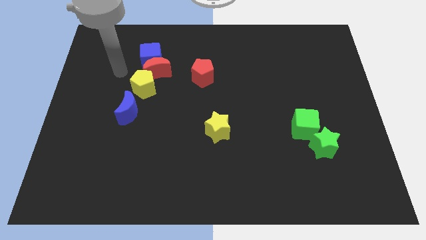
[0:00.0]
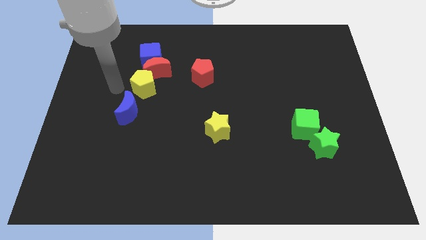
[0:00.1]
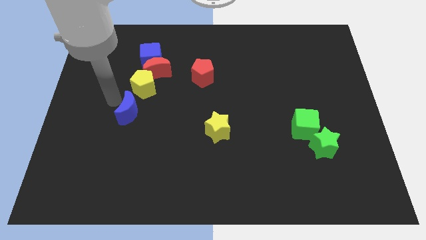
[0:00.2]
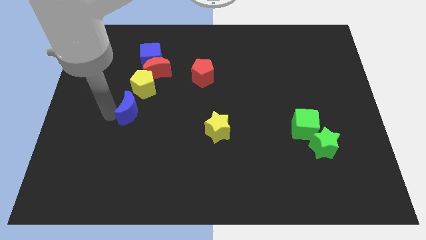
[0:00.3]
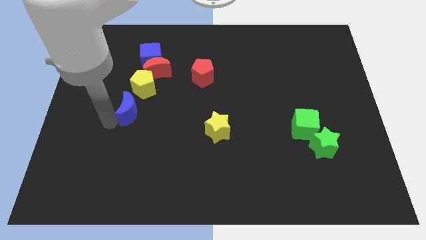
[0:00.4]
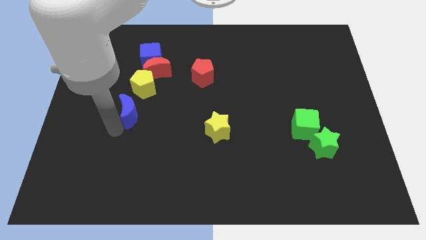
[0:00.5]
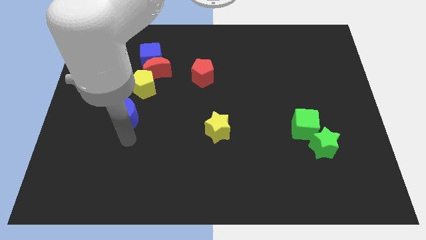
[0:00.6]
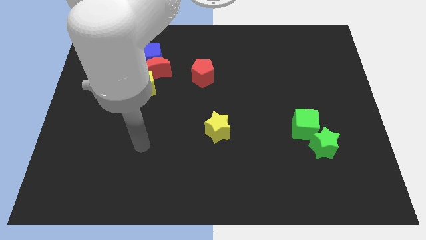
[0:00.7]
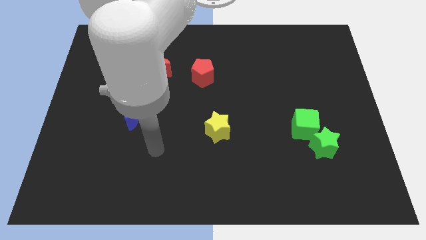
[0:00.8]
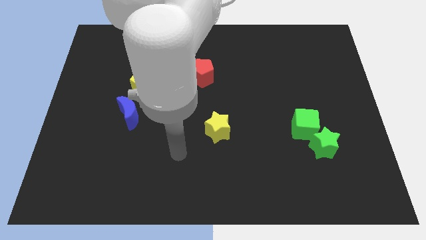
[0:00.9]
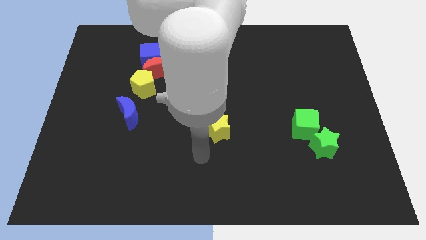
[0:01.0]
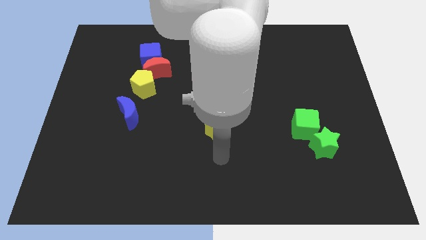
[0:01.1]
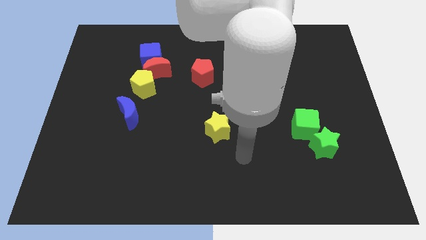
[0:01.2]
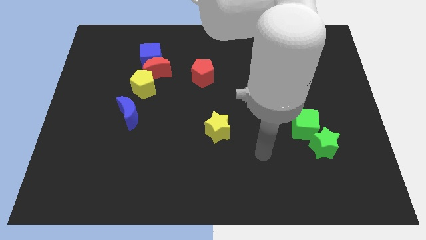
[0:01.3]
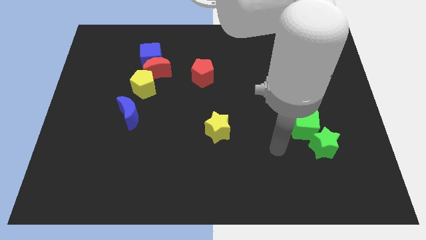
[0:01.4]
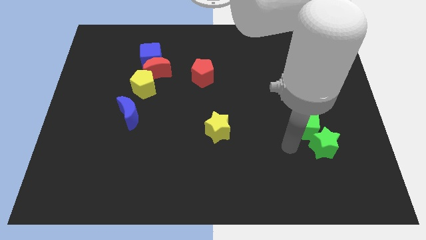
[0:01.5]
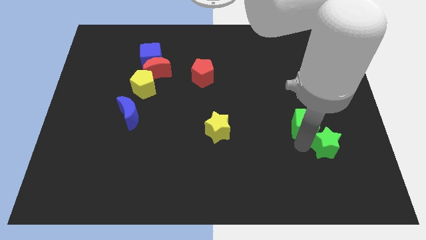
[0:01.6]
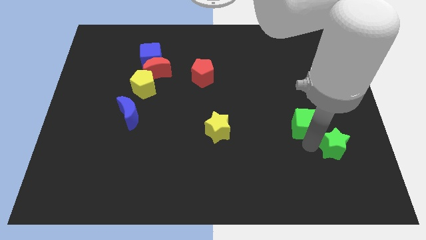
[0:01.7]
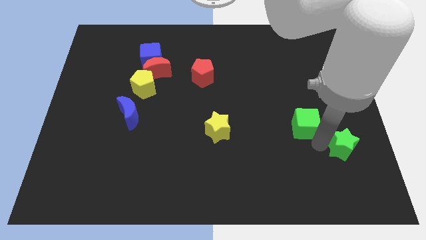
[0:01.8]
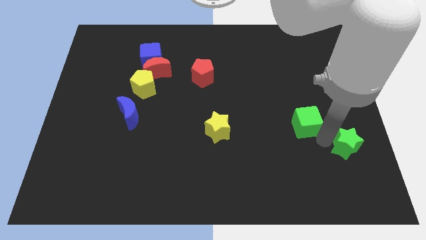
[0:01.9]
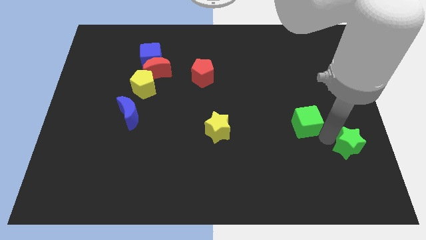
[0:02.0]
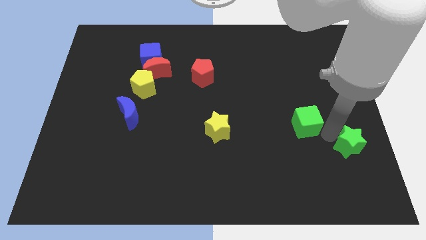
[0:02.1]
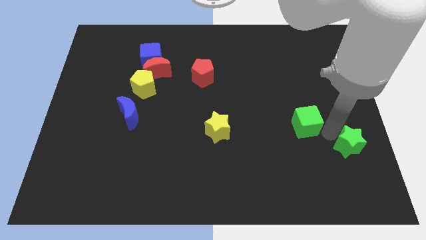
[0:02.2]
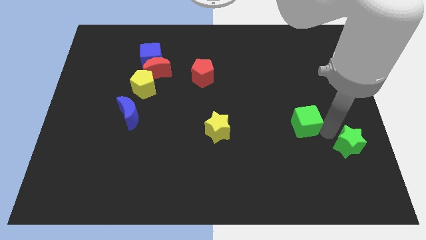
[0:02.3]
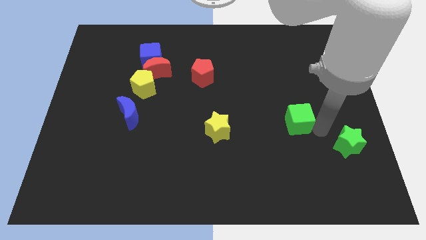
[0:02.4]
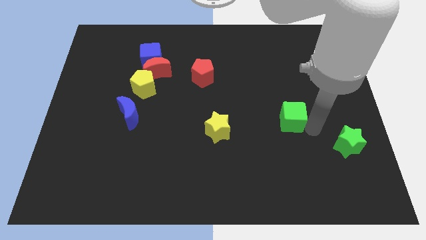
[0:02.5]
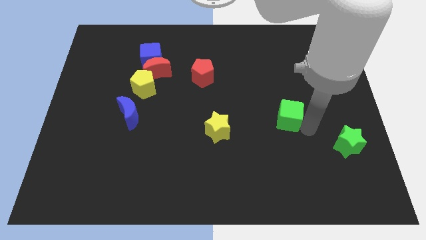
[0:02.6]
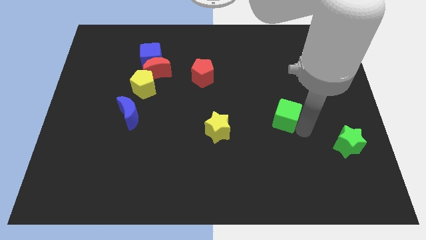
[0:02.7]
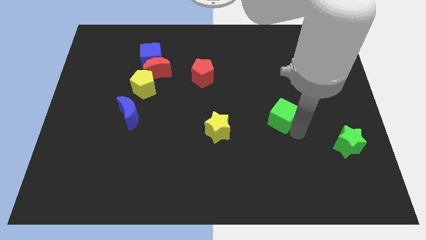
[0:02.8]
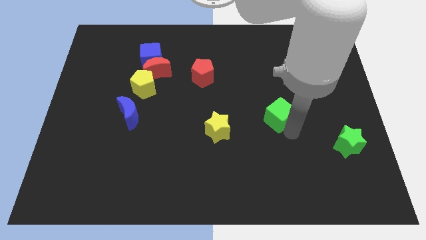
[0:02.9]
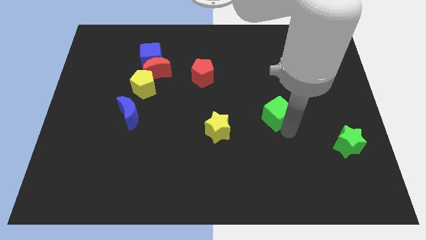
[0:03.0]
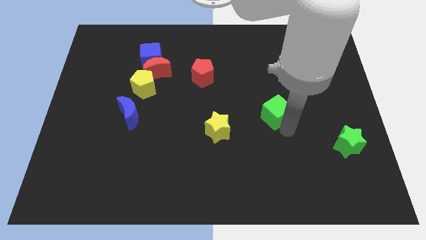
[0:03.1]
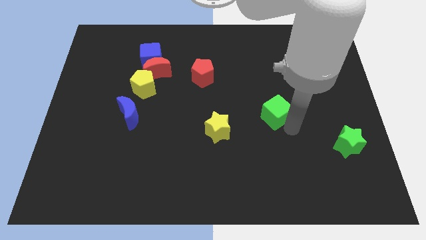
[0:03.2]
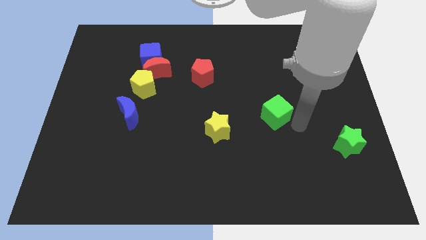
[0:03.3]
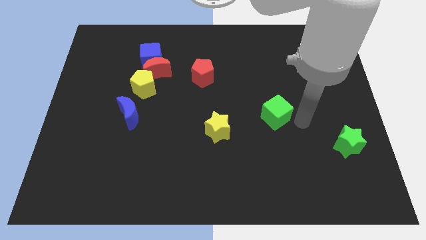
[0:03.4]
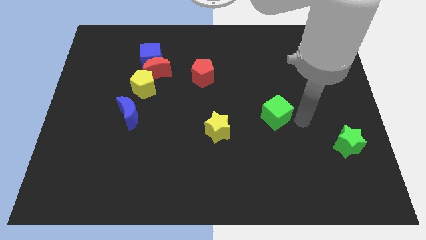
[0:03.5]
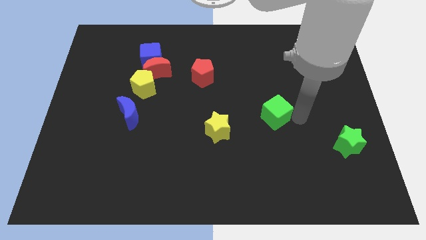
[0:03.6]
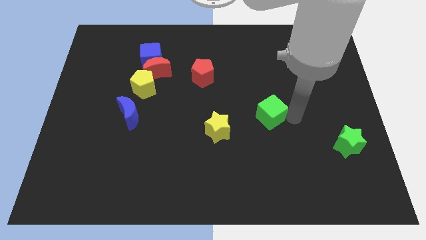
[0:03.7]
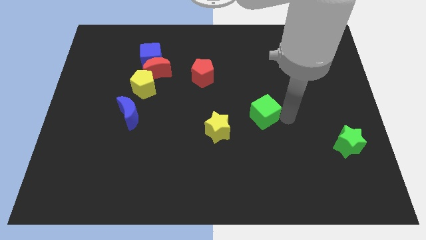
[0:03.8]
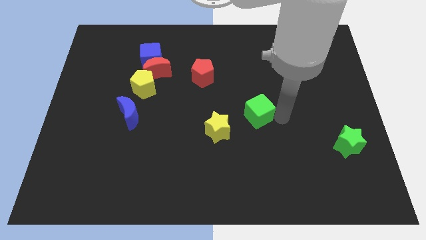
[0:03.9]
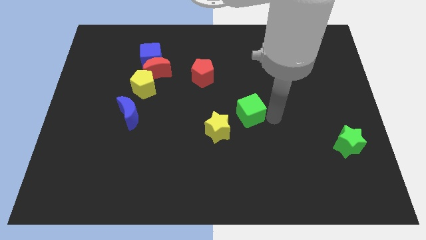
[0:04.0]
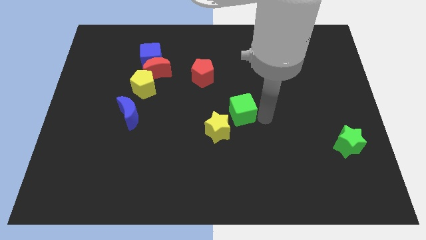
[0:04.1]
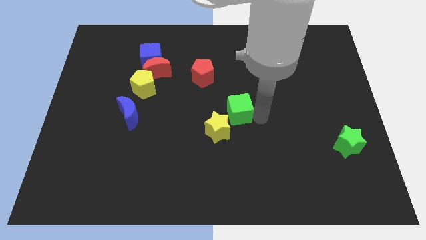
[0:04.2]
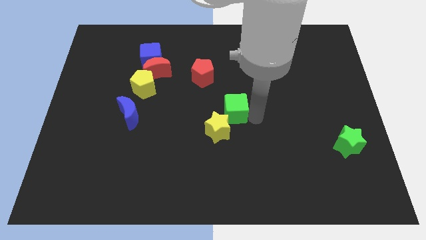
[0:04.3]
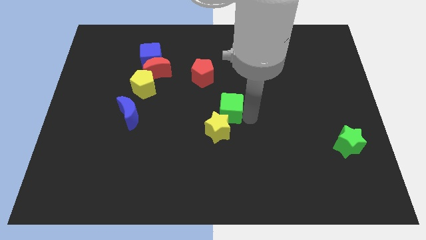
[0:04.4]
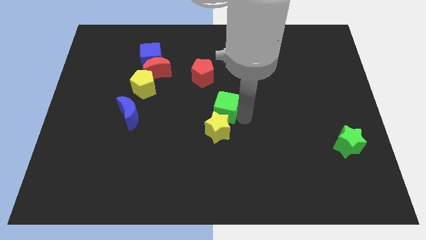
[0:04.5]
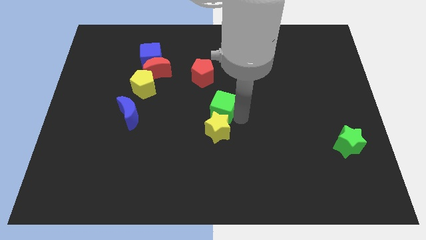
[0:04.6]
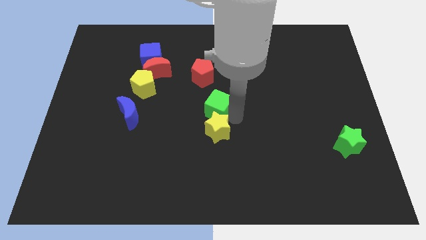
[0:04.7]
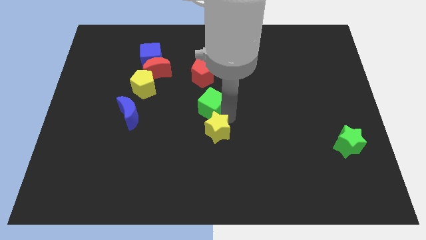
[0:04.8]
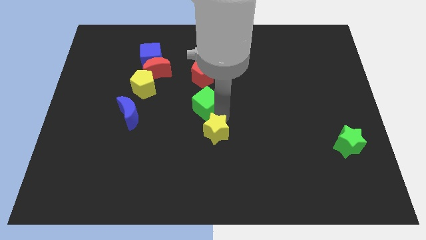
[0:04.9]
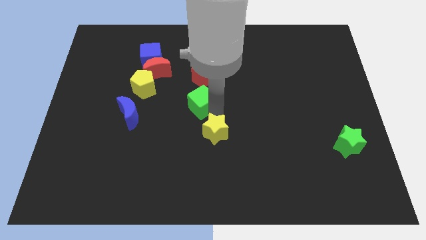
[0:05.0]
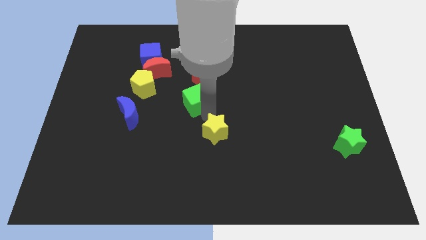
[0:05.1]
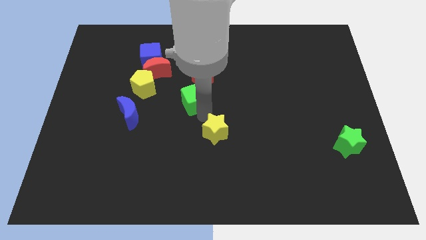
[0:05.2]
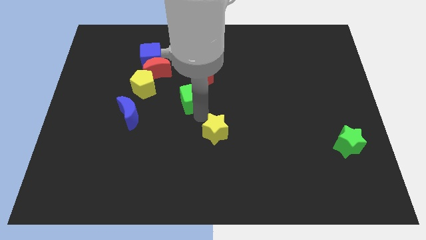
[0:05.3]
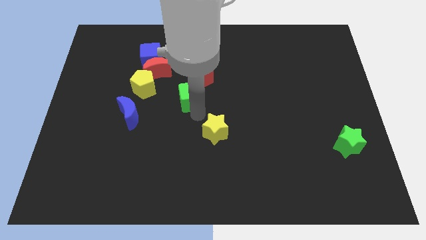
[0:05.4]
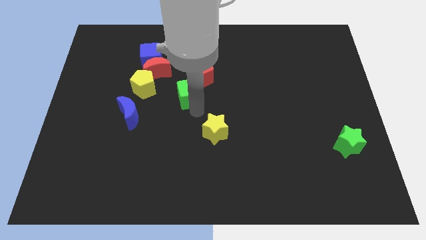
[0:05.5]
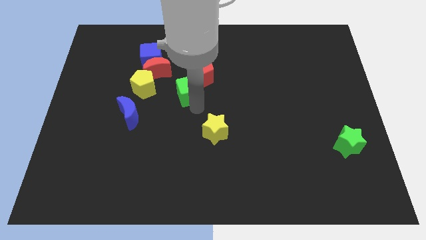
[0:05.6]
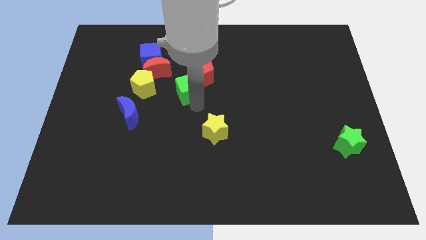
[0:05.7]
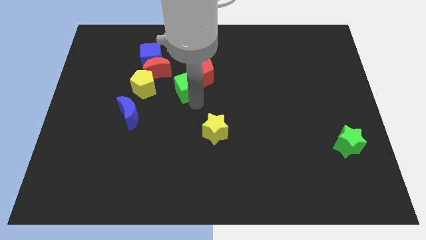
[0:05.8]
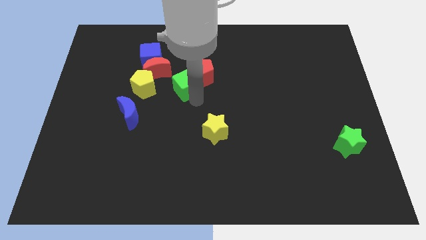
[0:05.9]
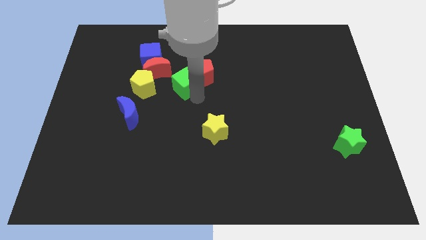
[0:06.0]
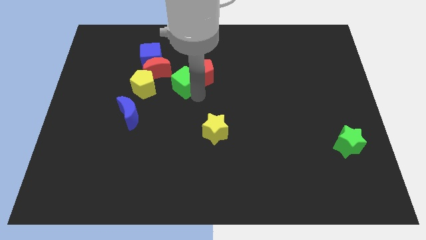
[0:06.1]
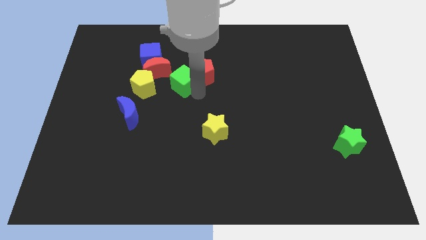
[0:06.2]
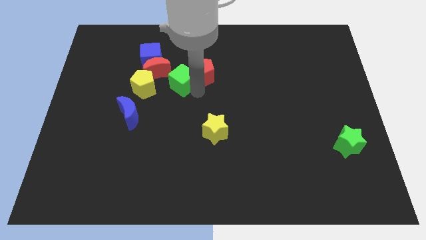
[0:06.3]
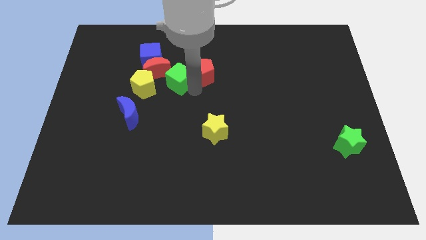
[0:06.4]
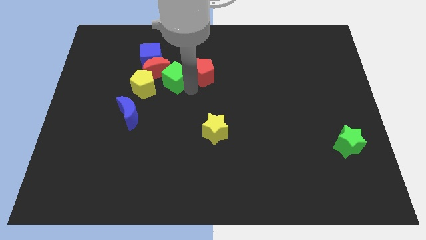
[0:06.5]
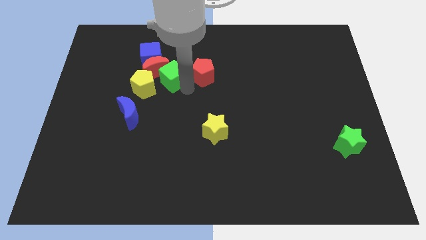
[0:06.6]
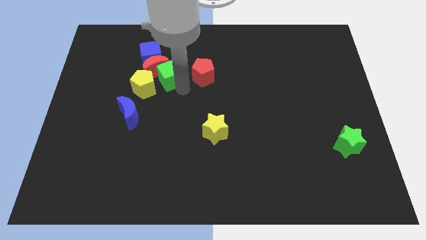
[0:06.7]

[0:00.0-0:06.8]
move the green cube next to the red moon

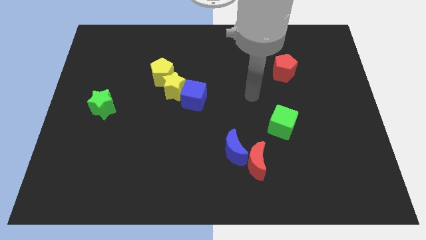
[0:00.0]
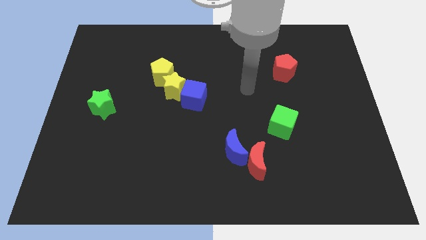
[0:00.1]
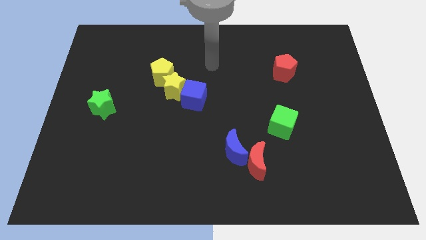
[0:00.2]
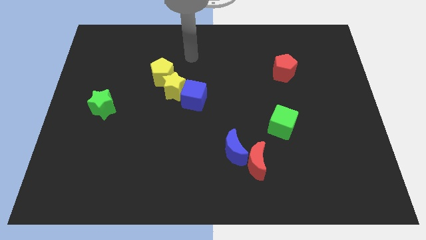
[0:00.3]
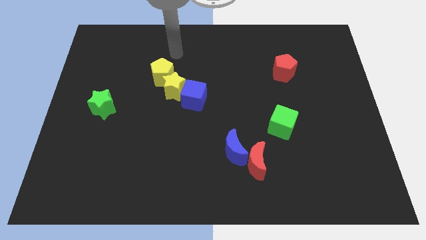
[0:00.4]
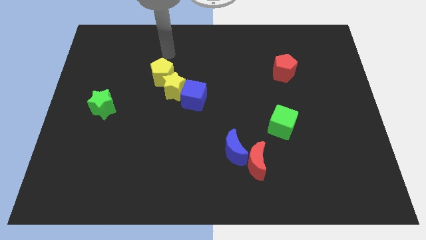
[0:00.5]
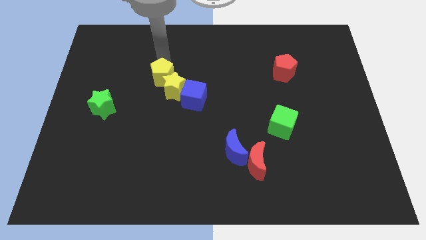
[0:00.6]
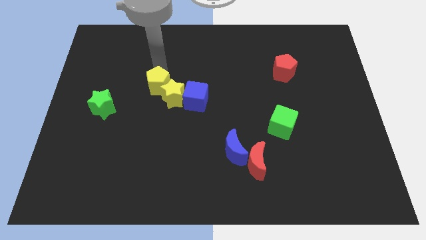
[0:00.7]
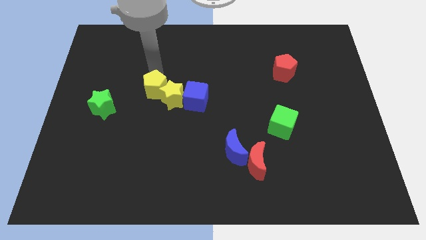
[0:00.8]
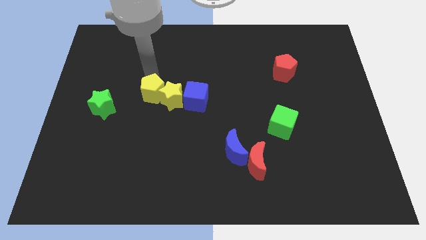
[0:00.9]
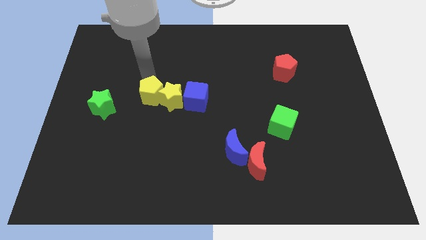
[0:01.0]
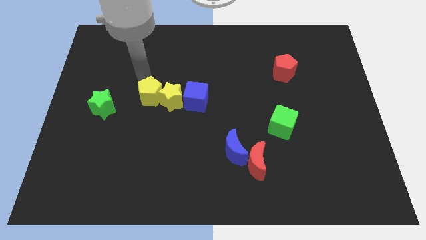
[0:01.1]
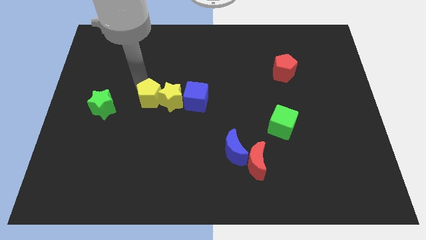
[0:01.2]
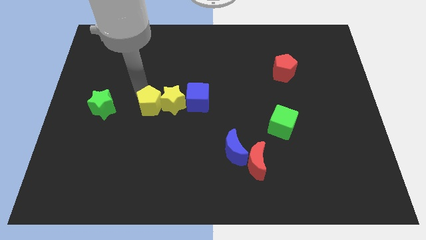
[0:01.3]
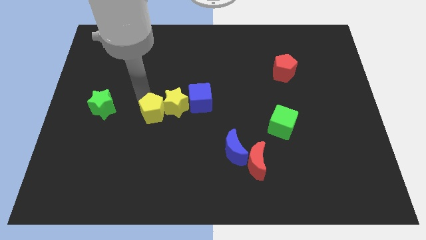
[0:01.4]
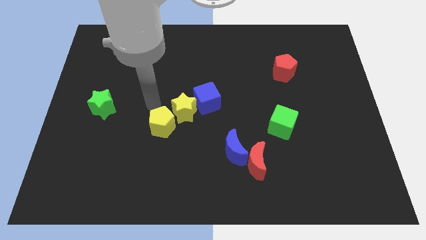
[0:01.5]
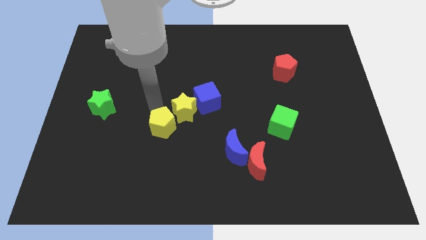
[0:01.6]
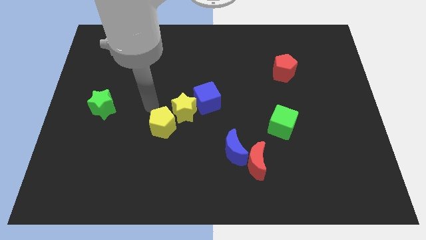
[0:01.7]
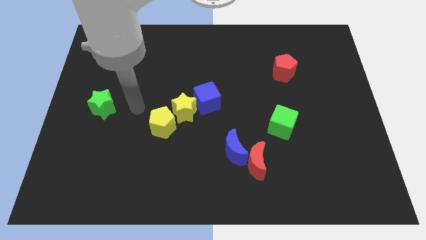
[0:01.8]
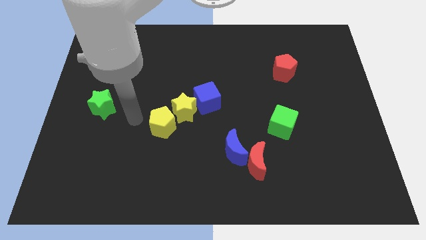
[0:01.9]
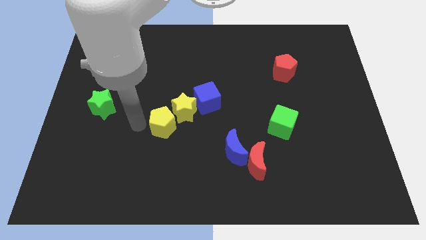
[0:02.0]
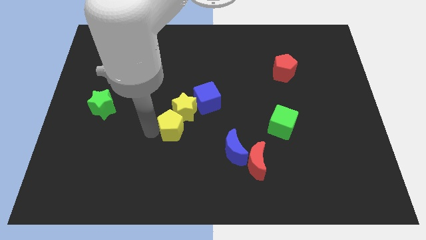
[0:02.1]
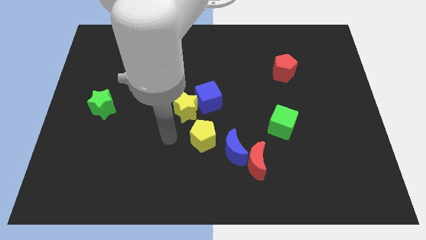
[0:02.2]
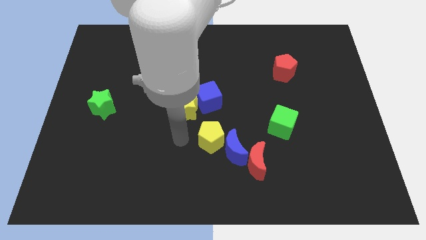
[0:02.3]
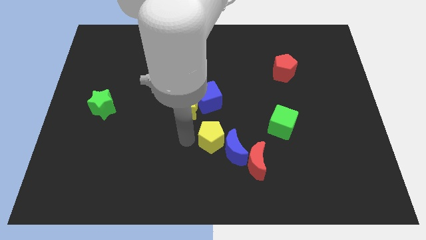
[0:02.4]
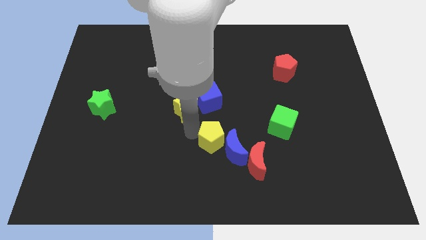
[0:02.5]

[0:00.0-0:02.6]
push the yellow pentagon towards the blue moon
